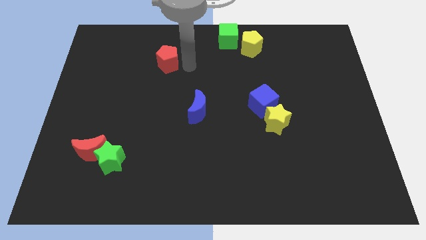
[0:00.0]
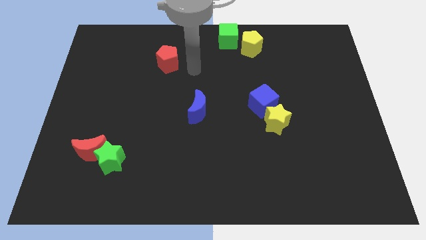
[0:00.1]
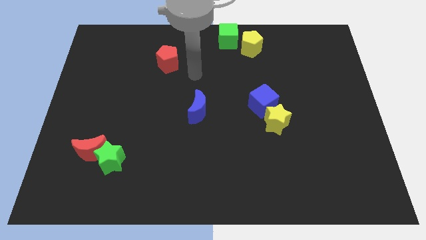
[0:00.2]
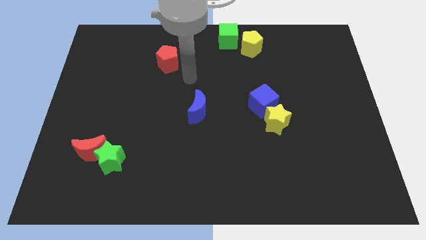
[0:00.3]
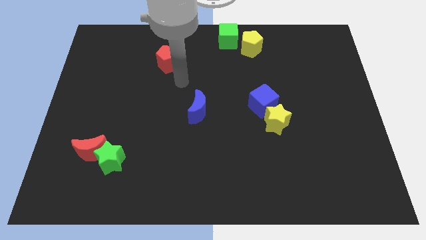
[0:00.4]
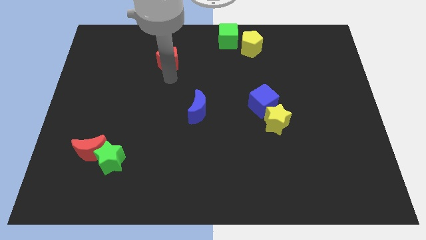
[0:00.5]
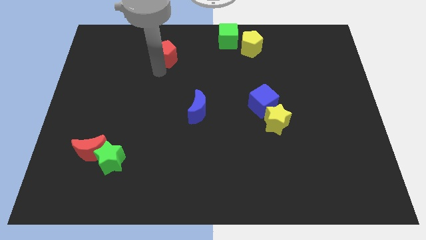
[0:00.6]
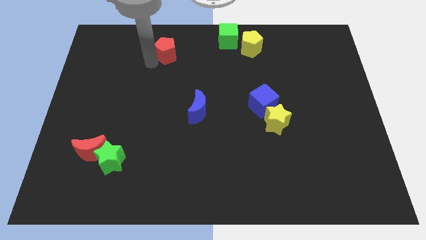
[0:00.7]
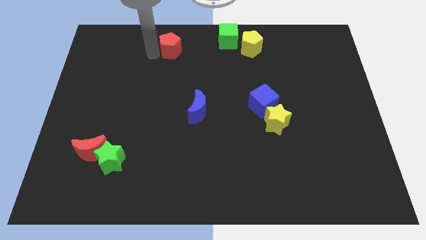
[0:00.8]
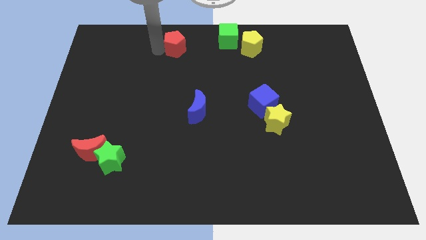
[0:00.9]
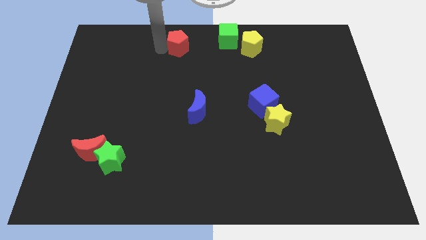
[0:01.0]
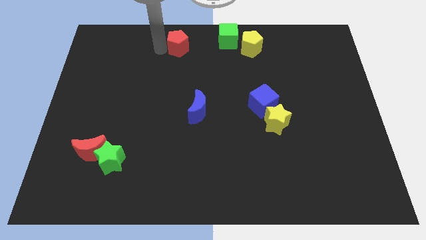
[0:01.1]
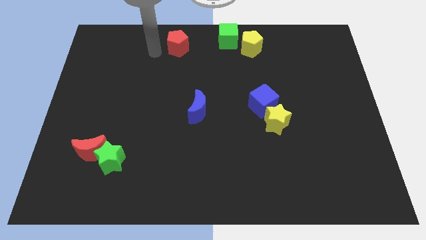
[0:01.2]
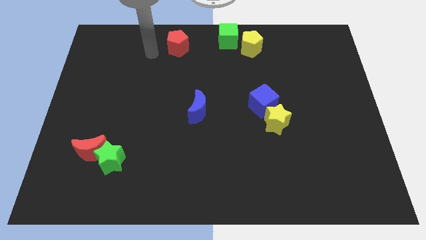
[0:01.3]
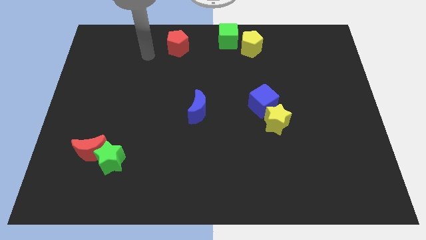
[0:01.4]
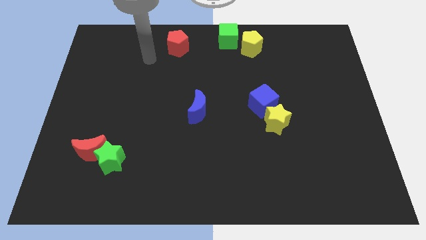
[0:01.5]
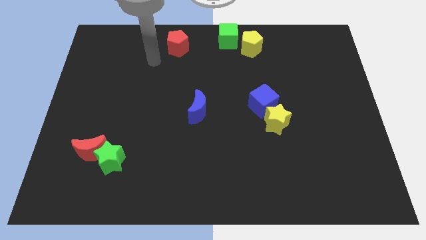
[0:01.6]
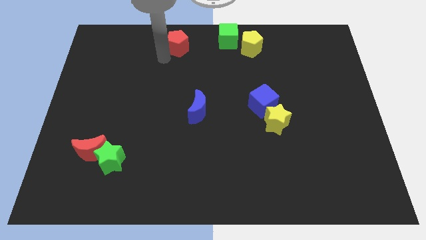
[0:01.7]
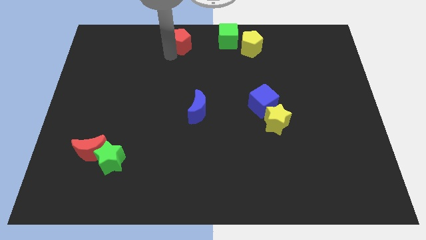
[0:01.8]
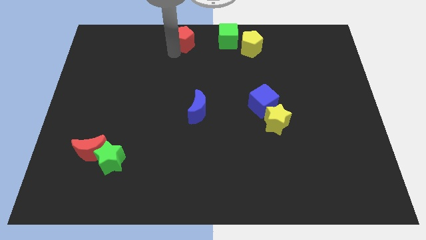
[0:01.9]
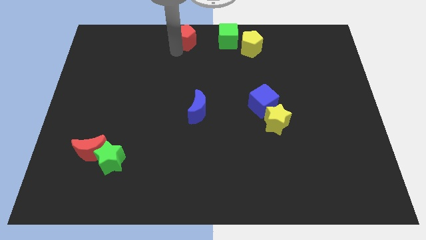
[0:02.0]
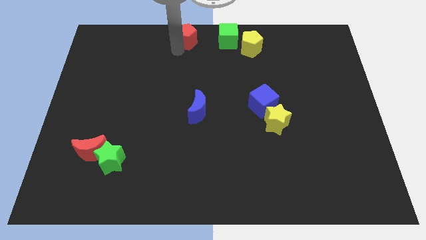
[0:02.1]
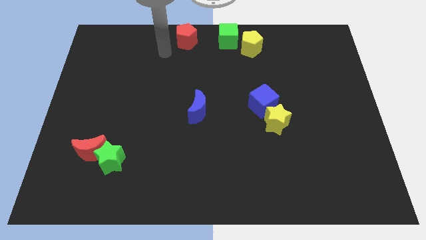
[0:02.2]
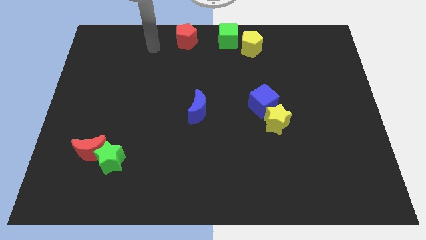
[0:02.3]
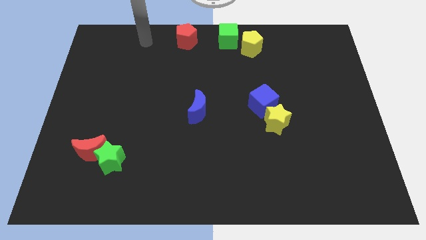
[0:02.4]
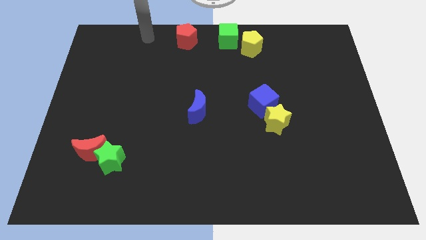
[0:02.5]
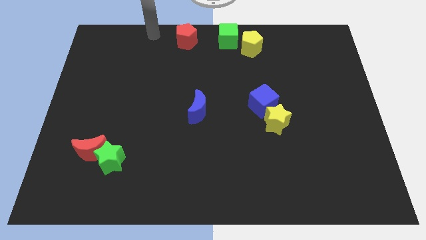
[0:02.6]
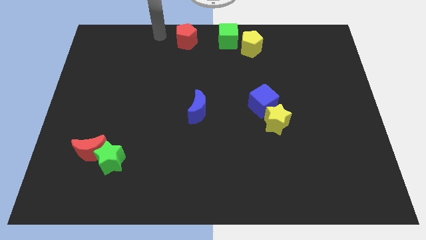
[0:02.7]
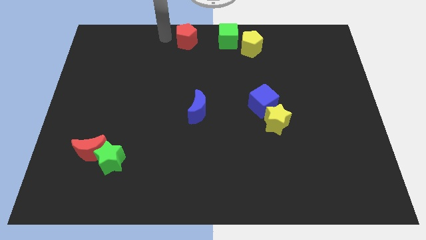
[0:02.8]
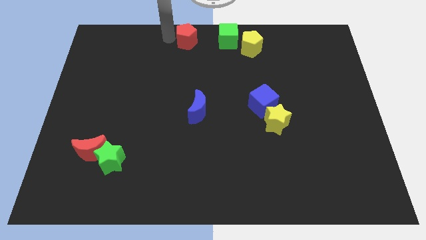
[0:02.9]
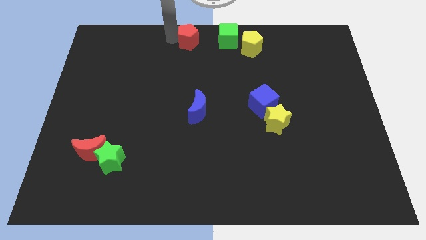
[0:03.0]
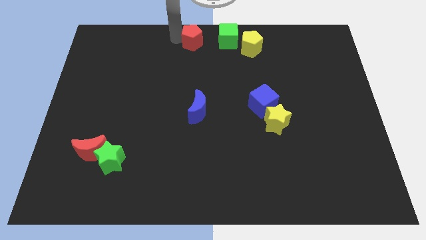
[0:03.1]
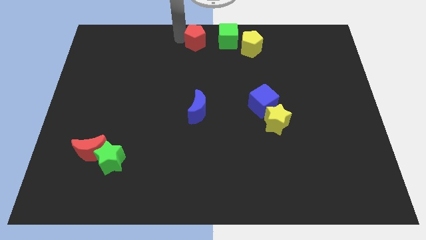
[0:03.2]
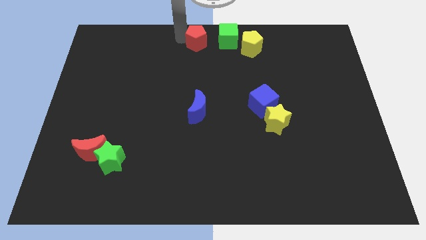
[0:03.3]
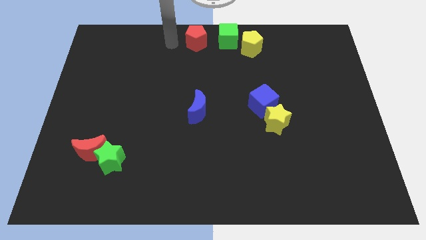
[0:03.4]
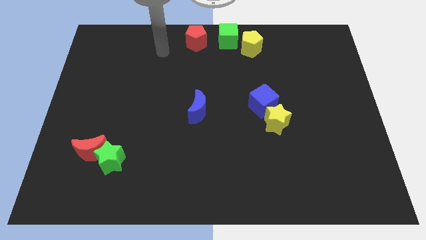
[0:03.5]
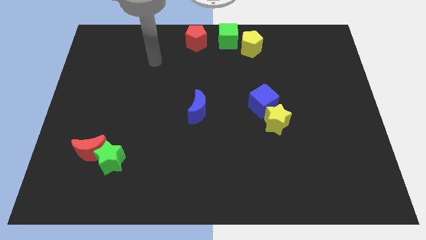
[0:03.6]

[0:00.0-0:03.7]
place red pentagon beside green cube

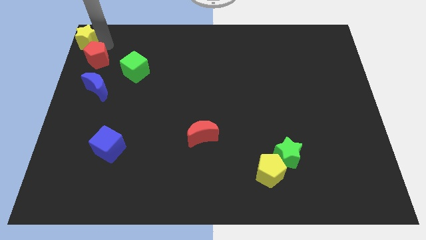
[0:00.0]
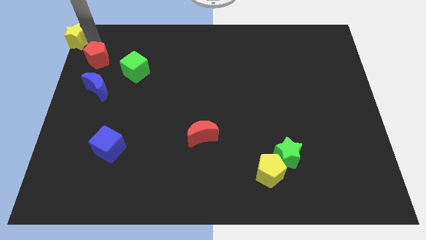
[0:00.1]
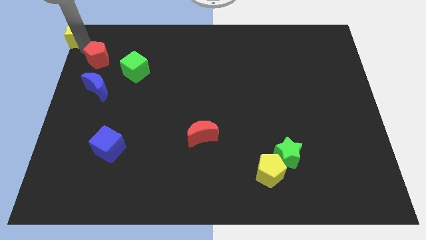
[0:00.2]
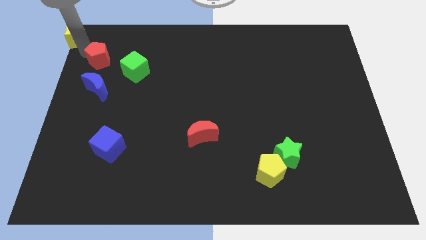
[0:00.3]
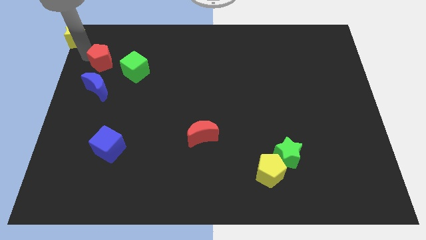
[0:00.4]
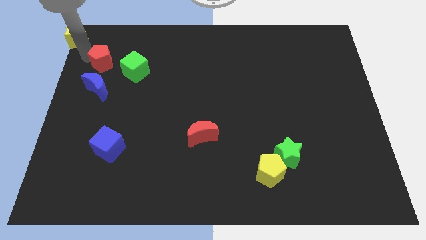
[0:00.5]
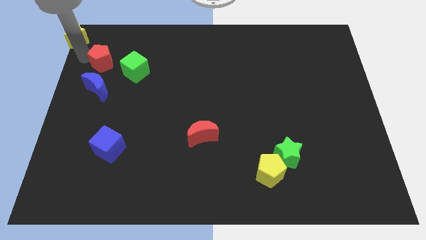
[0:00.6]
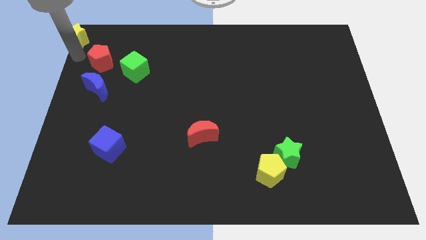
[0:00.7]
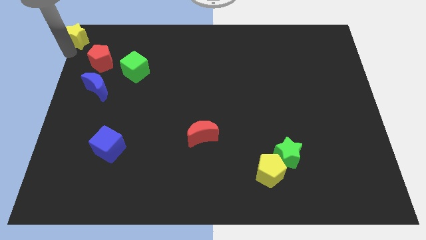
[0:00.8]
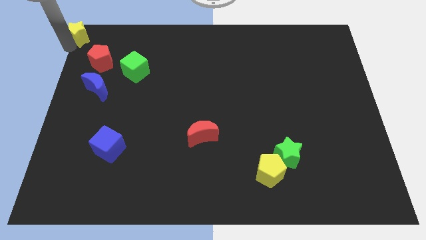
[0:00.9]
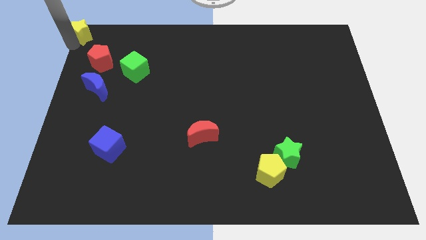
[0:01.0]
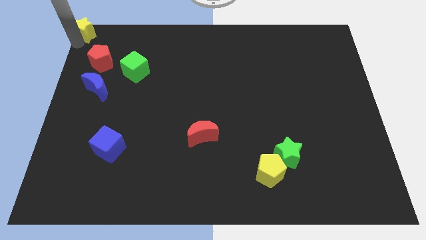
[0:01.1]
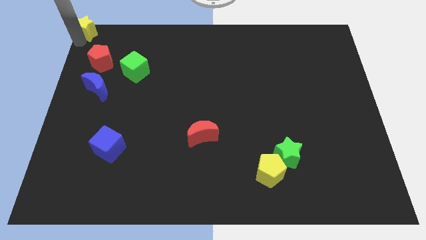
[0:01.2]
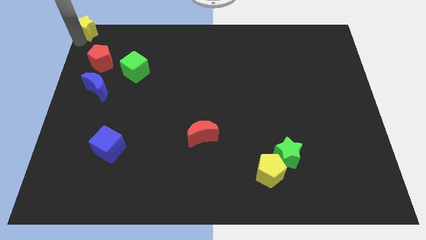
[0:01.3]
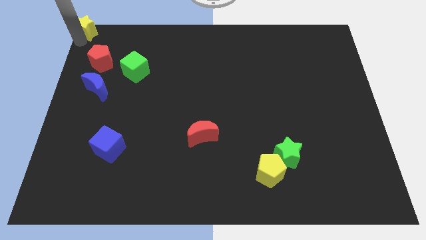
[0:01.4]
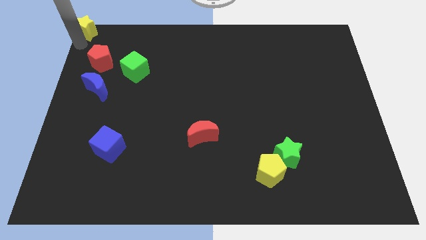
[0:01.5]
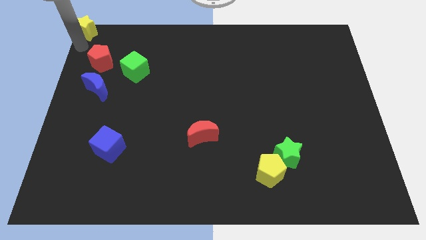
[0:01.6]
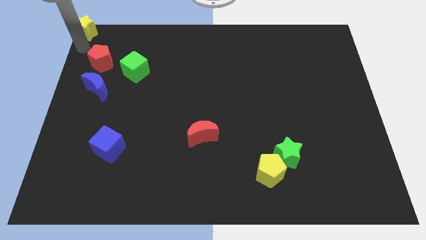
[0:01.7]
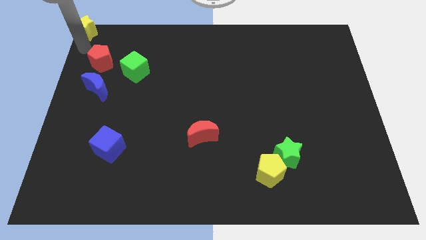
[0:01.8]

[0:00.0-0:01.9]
place a yellow star at the top left corner of the board

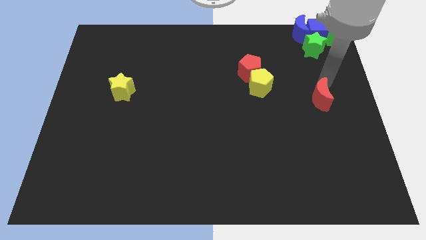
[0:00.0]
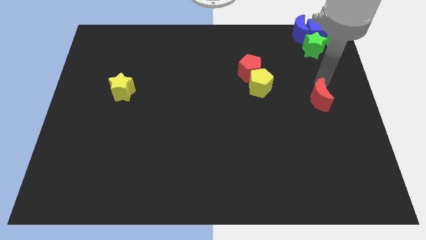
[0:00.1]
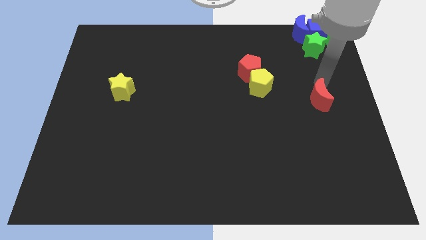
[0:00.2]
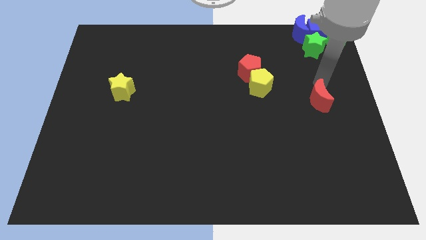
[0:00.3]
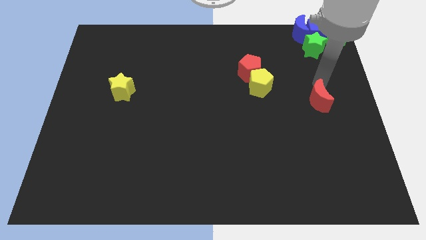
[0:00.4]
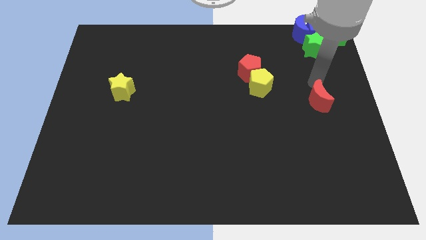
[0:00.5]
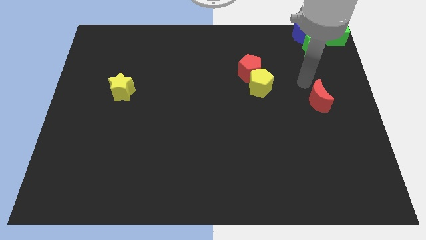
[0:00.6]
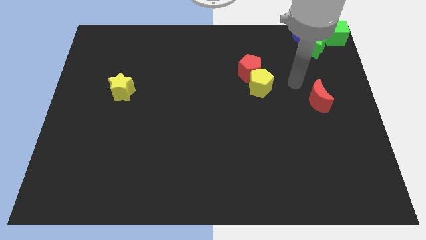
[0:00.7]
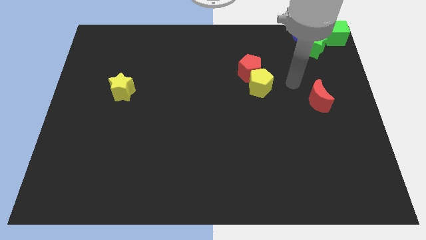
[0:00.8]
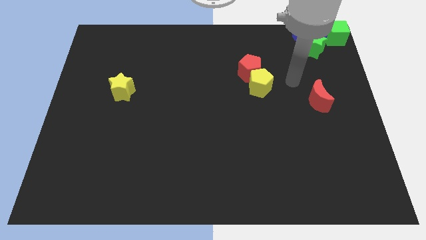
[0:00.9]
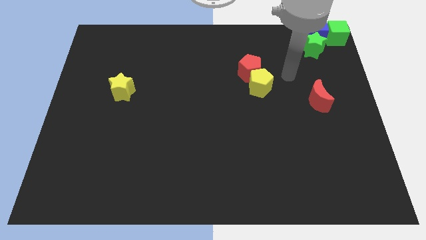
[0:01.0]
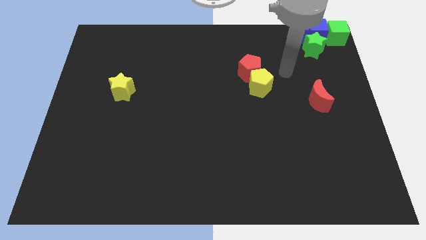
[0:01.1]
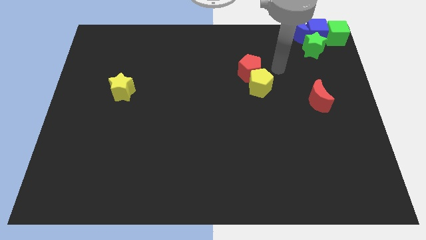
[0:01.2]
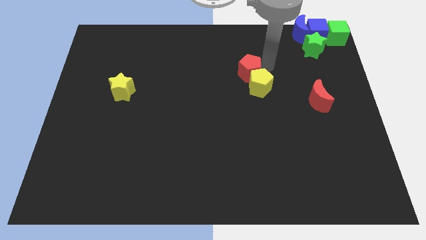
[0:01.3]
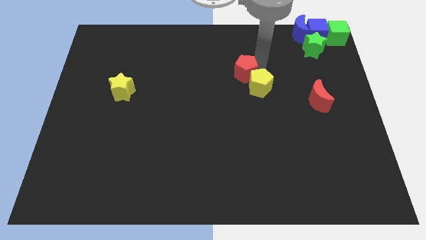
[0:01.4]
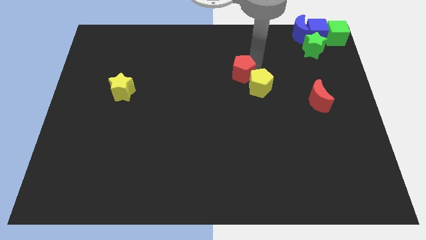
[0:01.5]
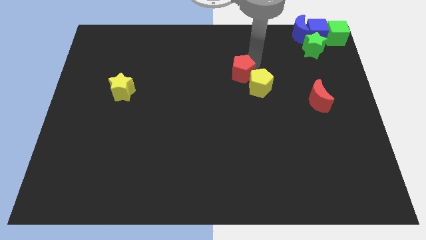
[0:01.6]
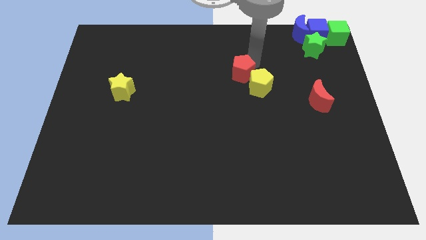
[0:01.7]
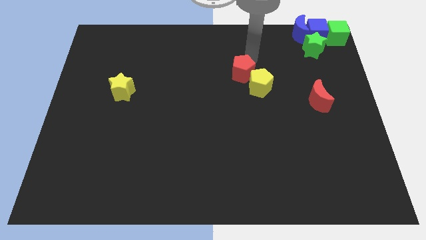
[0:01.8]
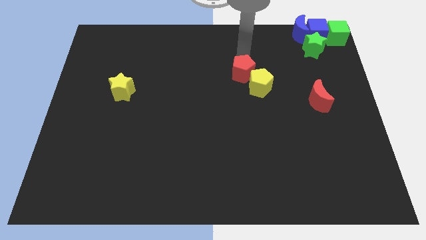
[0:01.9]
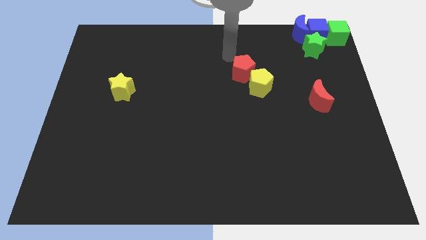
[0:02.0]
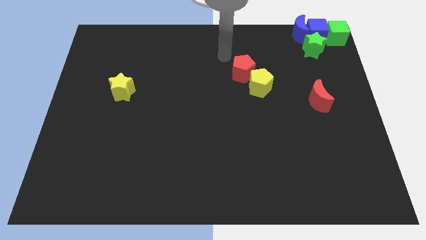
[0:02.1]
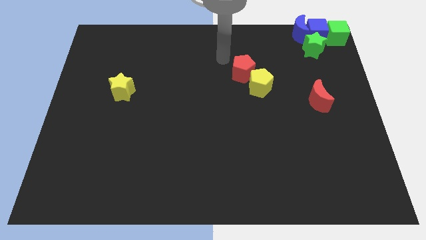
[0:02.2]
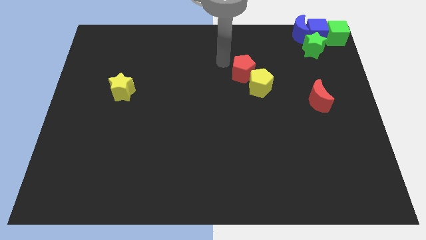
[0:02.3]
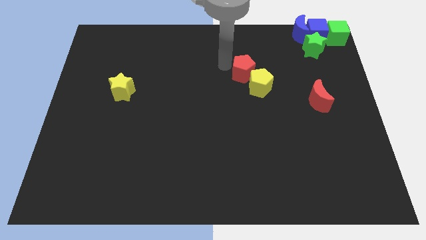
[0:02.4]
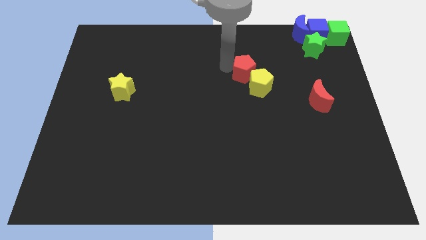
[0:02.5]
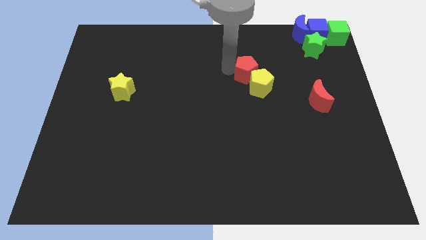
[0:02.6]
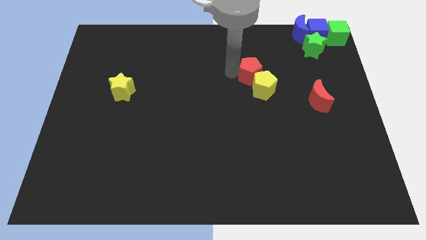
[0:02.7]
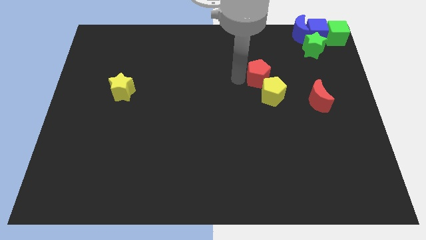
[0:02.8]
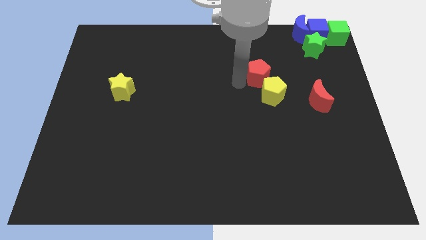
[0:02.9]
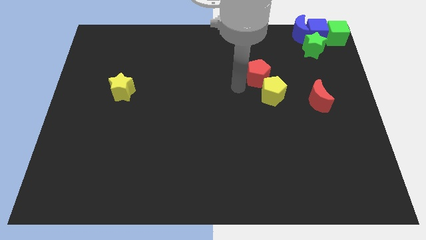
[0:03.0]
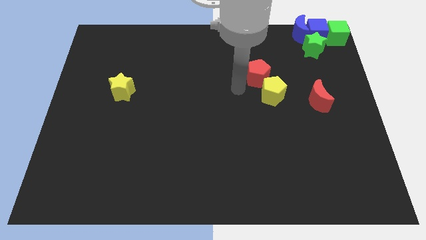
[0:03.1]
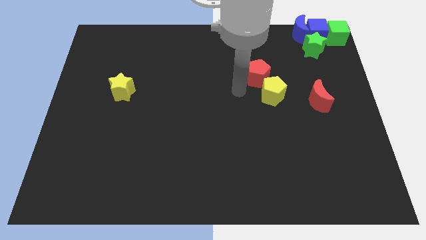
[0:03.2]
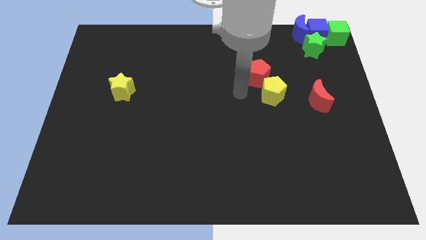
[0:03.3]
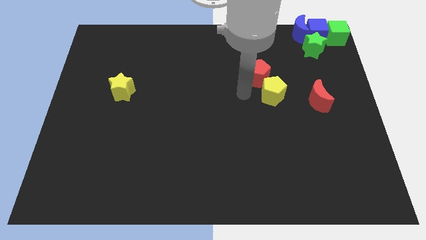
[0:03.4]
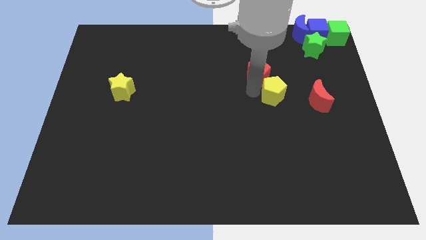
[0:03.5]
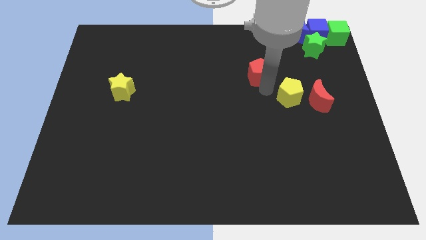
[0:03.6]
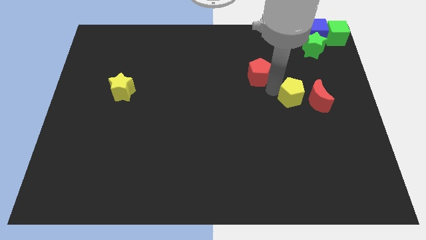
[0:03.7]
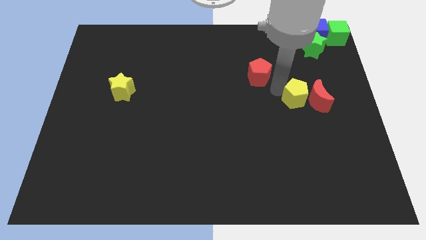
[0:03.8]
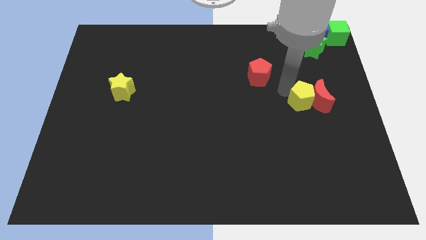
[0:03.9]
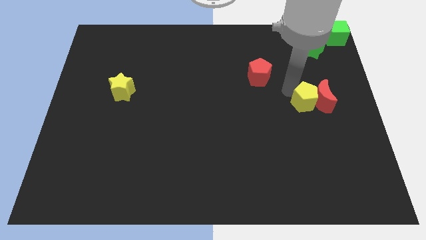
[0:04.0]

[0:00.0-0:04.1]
separate red pentagon and the yellow pentagon
